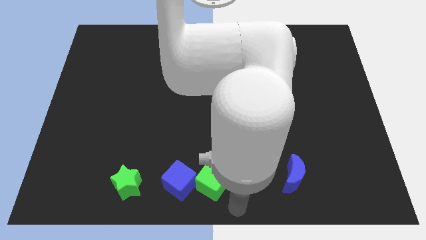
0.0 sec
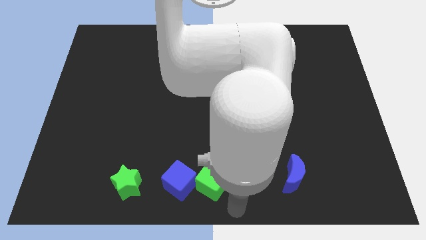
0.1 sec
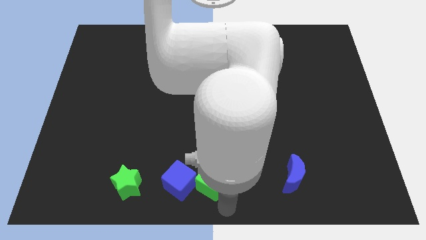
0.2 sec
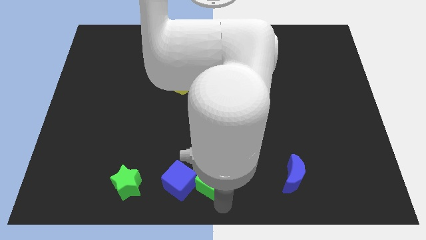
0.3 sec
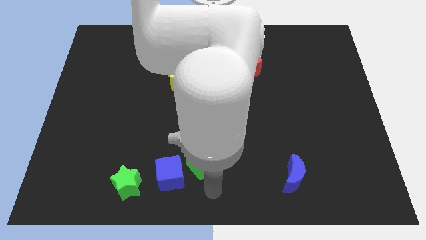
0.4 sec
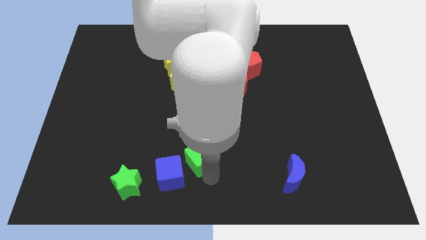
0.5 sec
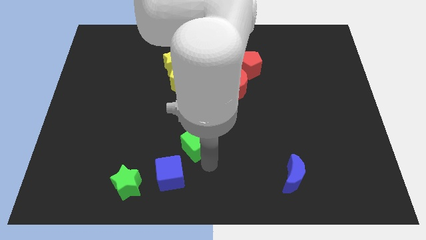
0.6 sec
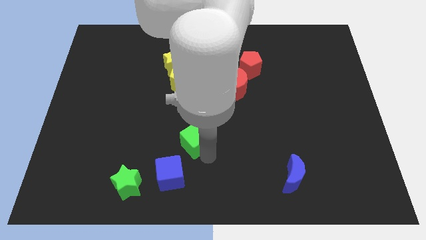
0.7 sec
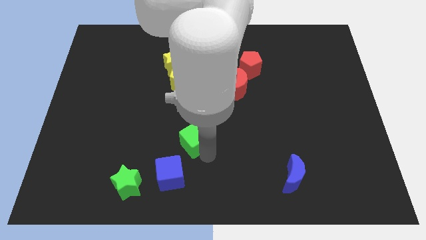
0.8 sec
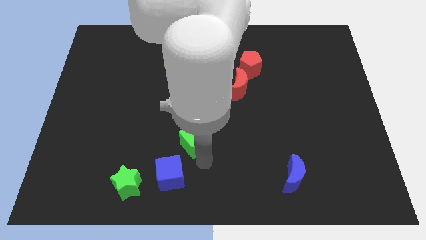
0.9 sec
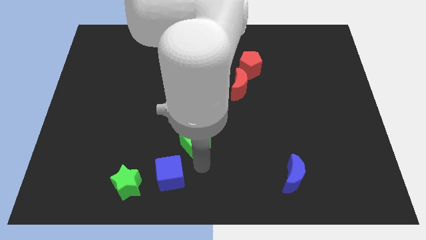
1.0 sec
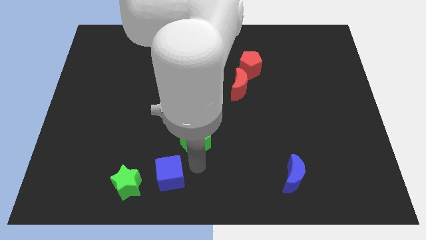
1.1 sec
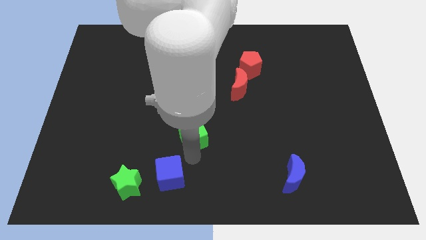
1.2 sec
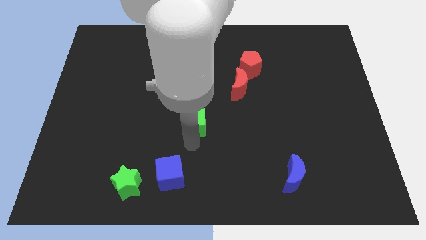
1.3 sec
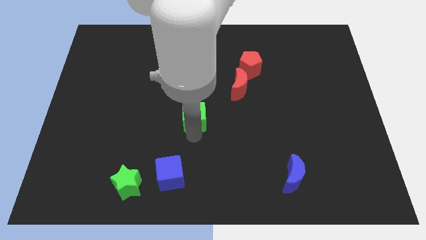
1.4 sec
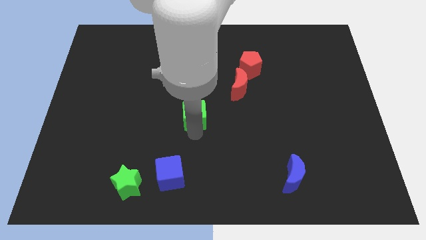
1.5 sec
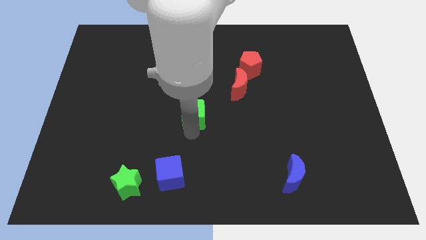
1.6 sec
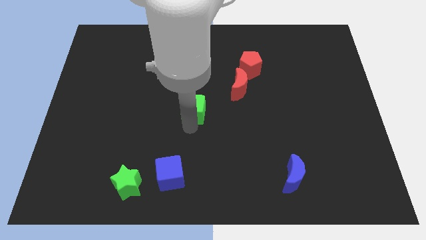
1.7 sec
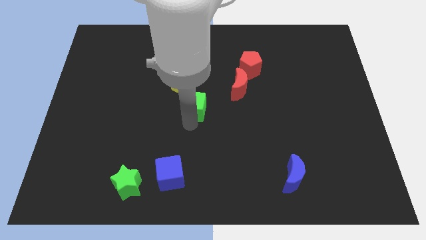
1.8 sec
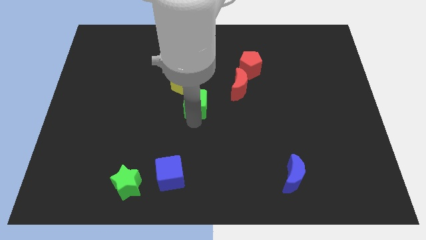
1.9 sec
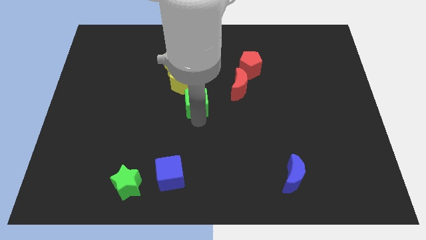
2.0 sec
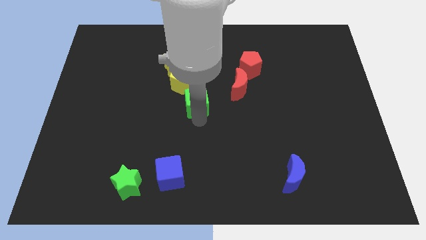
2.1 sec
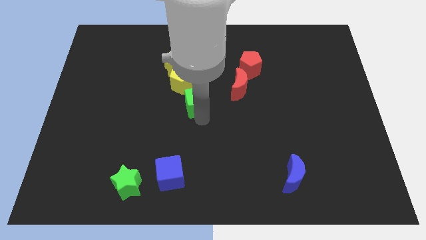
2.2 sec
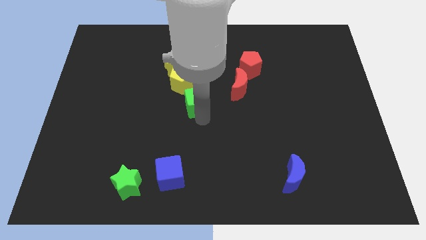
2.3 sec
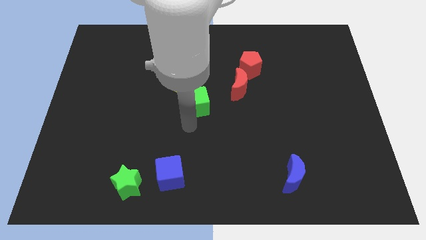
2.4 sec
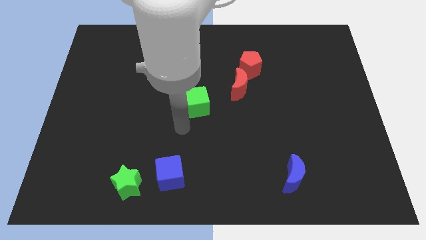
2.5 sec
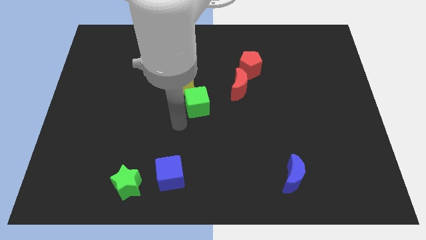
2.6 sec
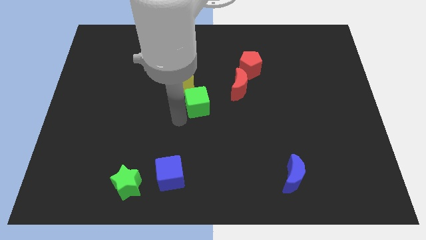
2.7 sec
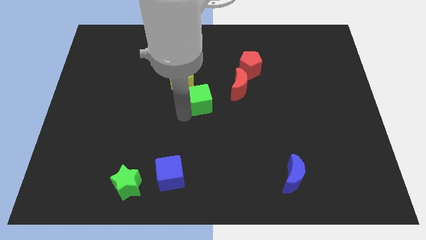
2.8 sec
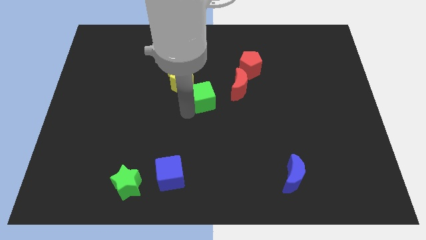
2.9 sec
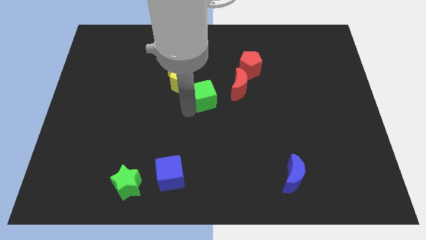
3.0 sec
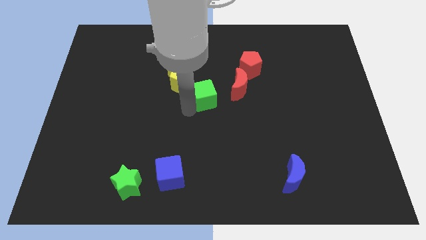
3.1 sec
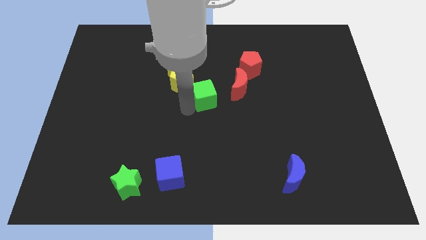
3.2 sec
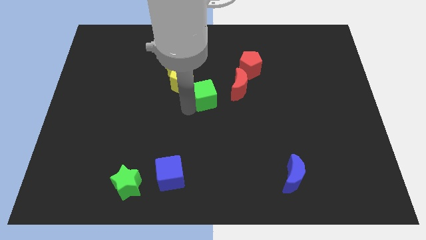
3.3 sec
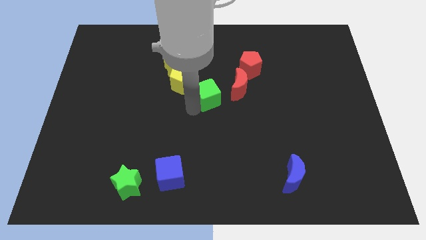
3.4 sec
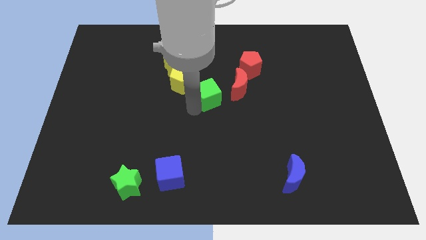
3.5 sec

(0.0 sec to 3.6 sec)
push the green cube to the left side of the red moon

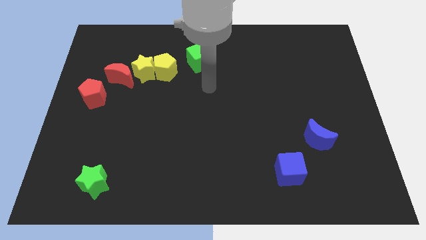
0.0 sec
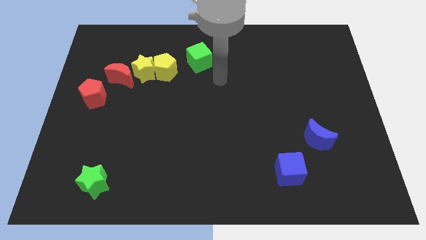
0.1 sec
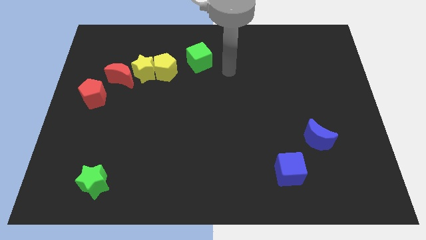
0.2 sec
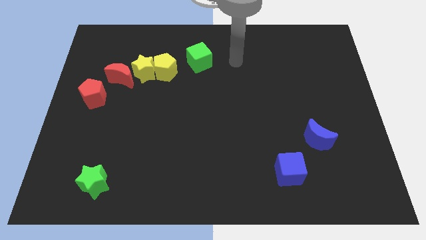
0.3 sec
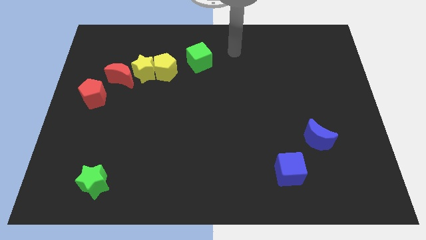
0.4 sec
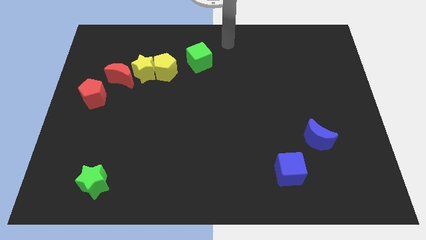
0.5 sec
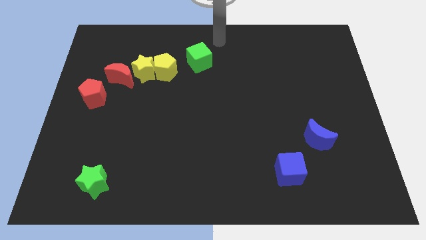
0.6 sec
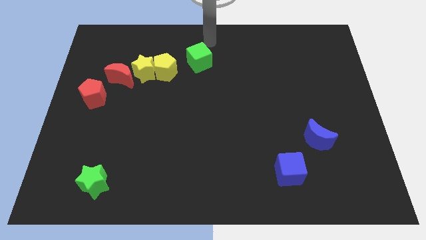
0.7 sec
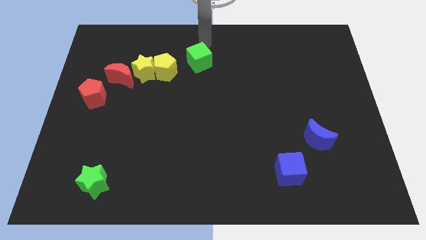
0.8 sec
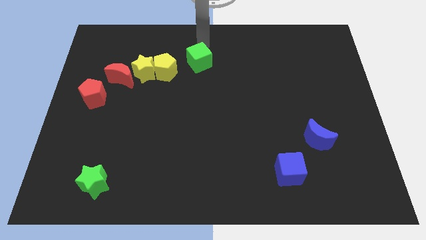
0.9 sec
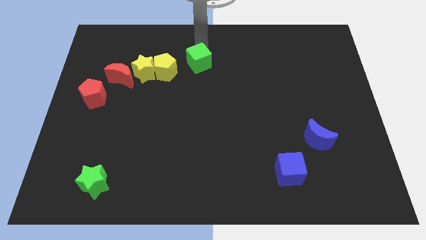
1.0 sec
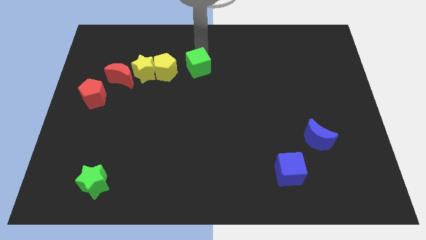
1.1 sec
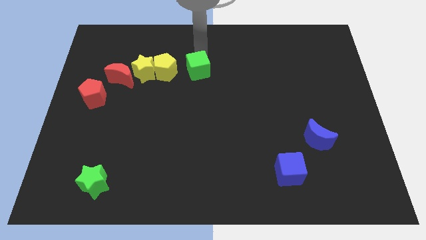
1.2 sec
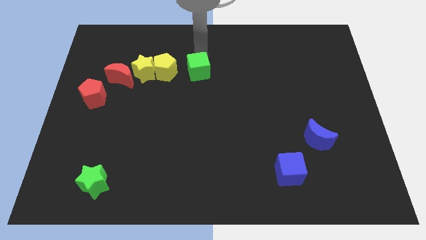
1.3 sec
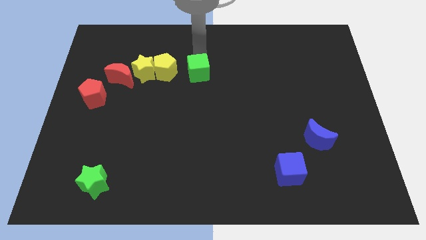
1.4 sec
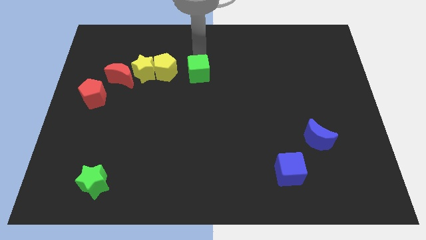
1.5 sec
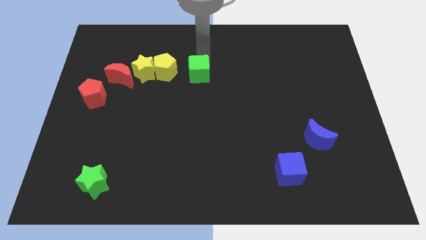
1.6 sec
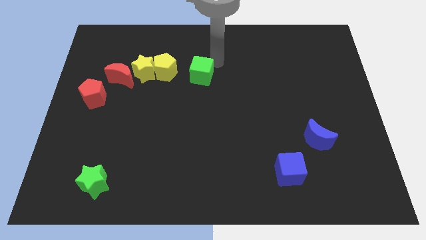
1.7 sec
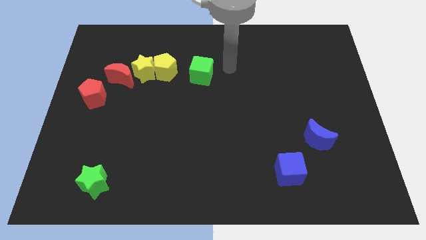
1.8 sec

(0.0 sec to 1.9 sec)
adjust the green cube to the right side of the yellow pentagon

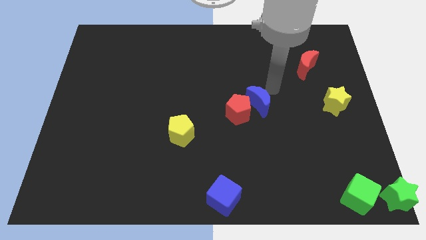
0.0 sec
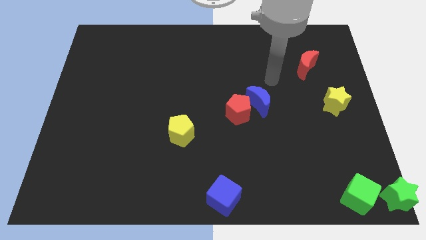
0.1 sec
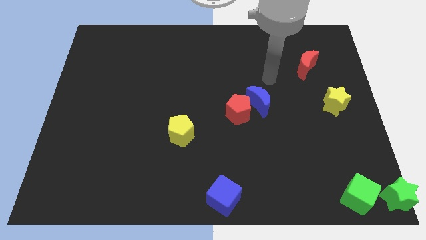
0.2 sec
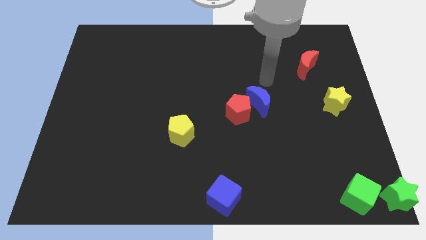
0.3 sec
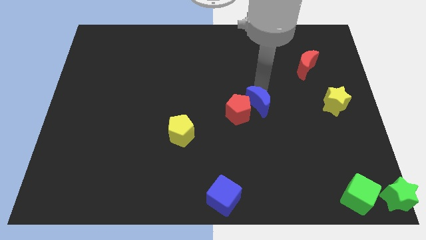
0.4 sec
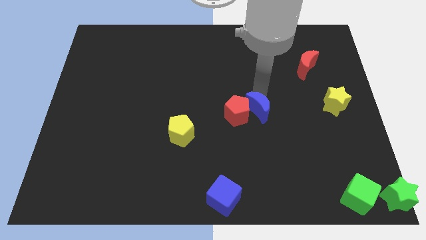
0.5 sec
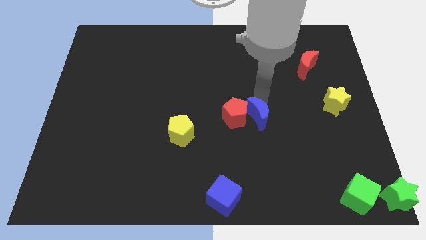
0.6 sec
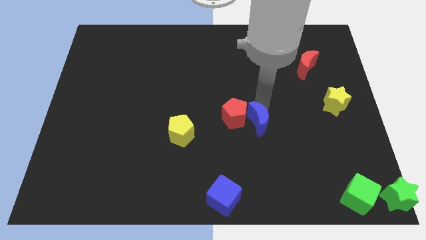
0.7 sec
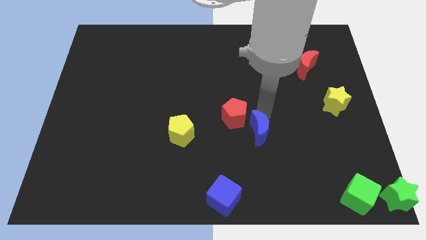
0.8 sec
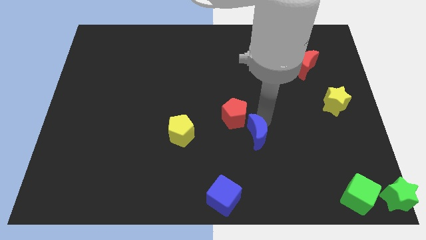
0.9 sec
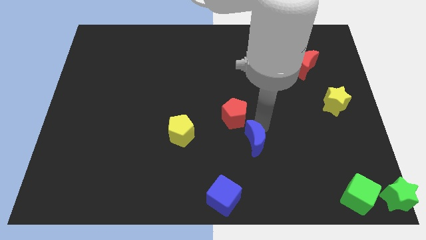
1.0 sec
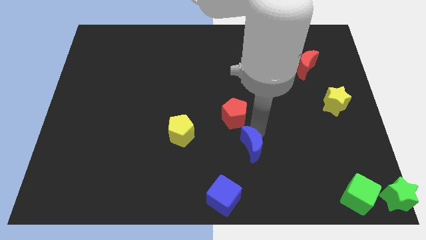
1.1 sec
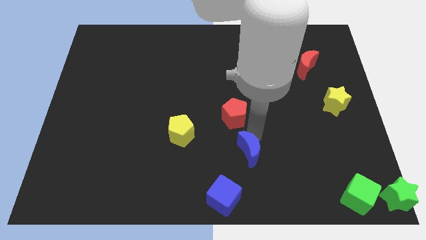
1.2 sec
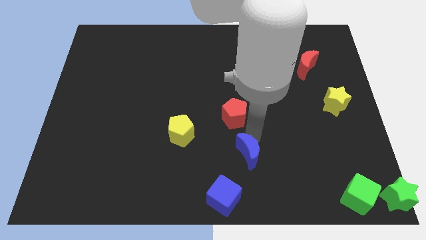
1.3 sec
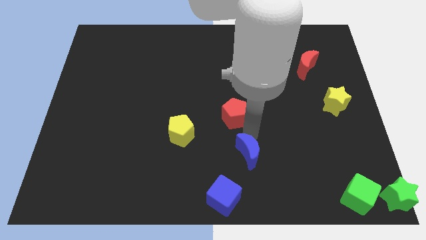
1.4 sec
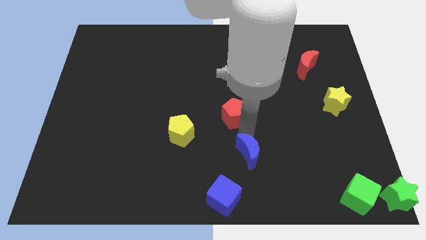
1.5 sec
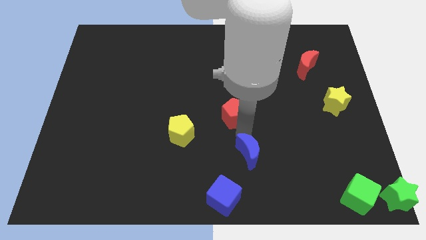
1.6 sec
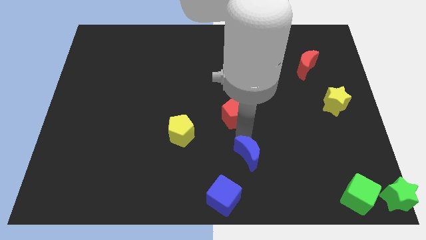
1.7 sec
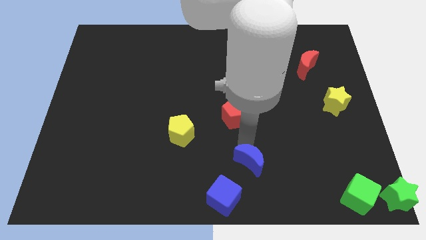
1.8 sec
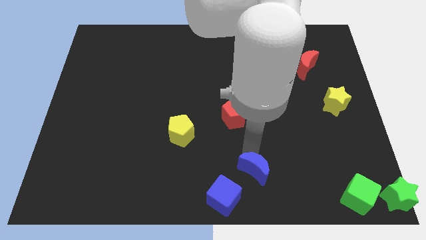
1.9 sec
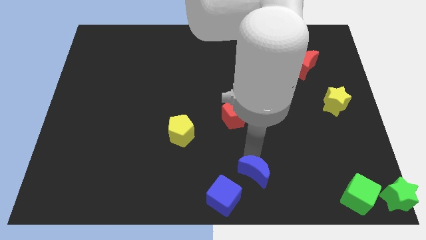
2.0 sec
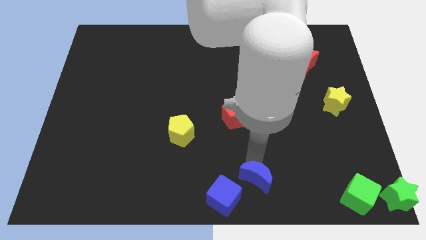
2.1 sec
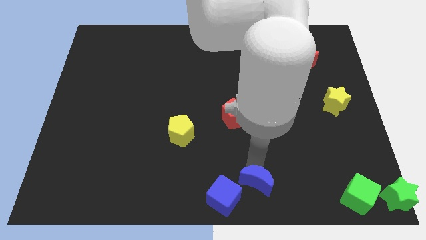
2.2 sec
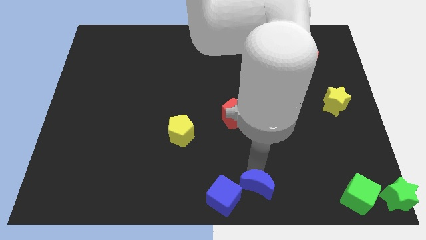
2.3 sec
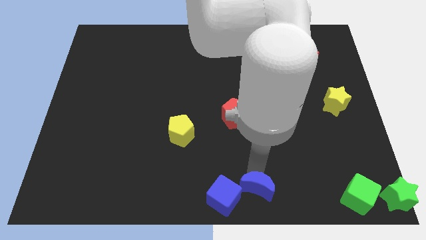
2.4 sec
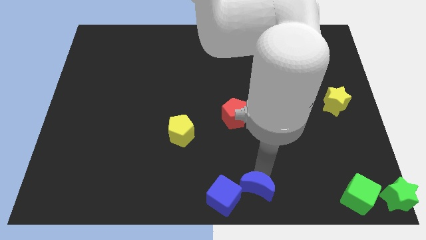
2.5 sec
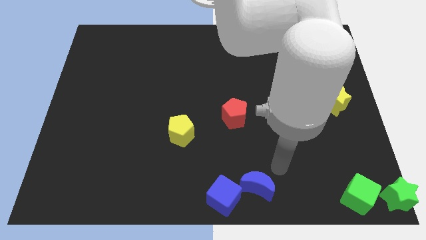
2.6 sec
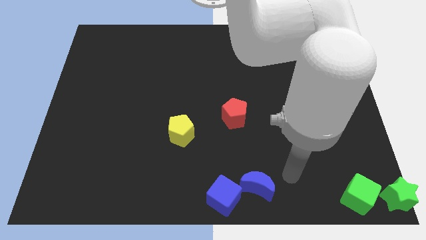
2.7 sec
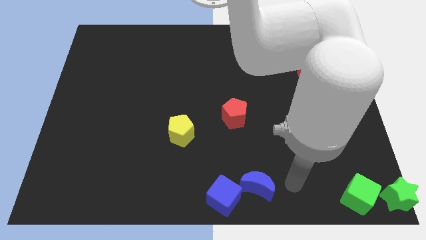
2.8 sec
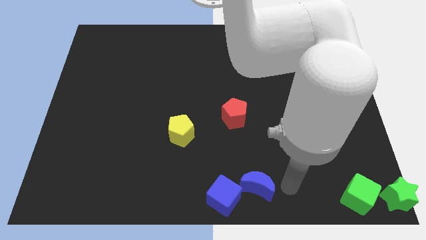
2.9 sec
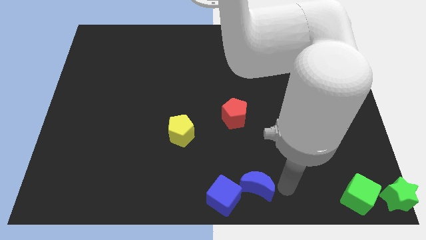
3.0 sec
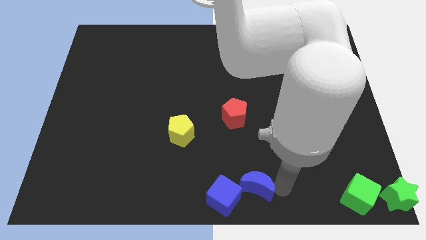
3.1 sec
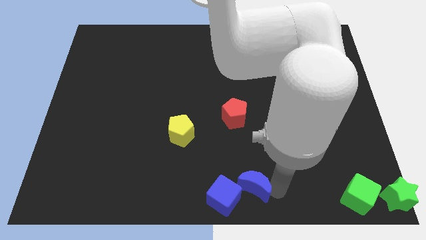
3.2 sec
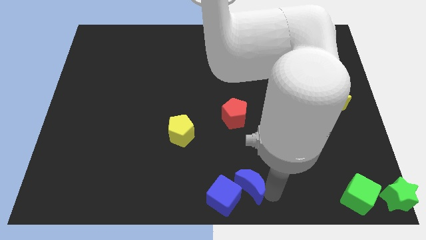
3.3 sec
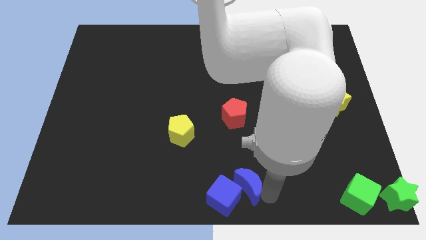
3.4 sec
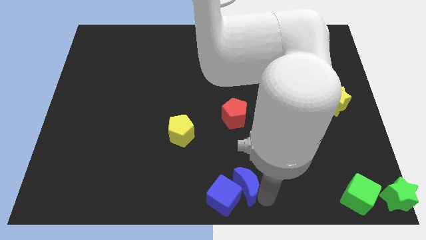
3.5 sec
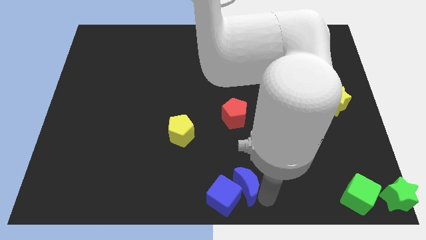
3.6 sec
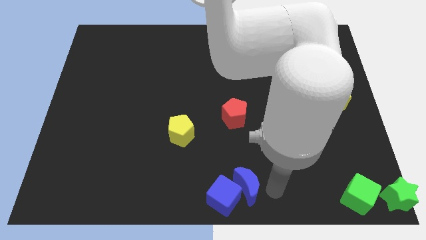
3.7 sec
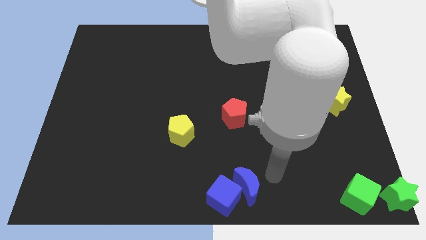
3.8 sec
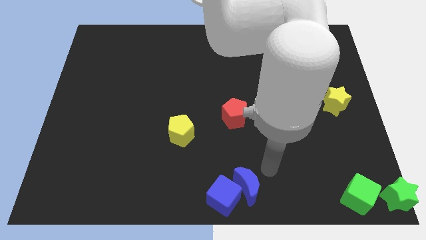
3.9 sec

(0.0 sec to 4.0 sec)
push the blue moon into the blue cube
